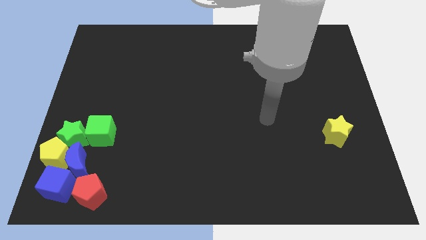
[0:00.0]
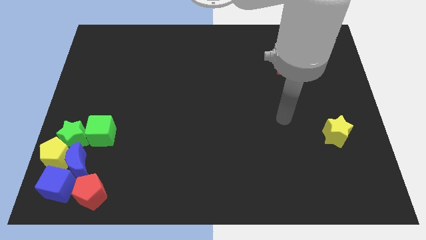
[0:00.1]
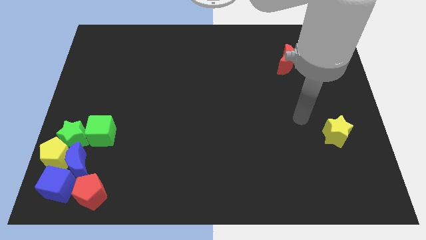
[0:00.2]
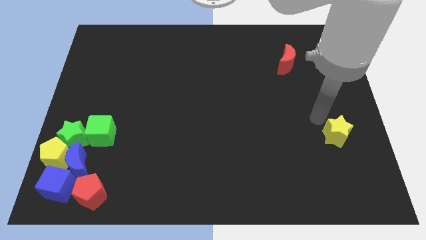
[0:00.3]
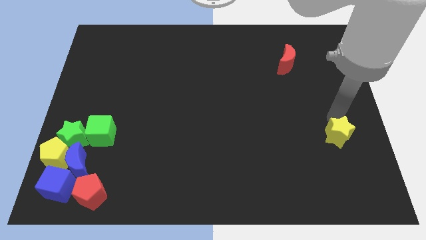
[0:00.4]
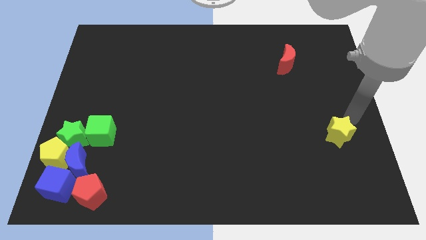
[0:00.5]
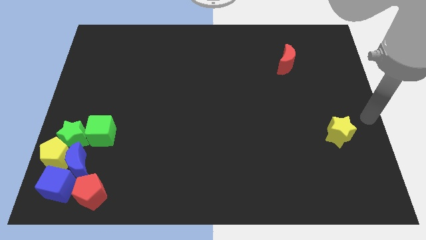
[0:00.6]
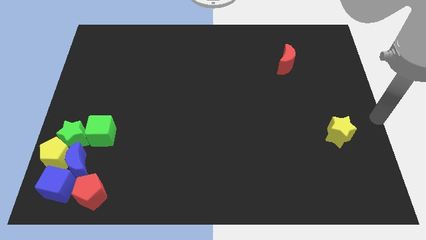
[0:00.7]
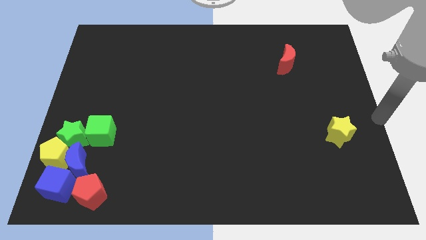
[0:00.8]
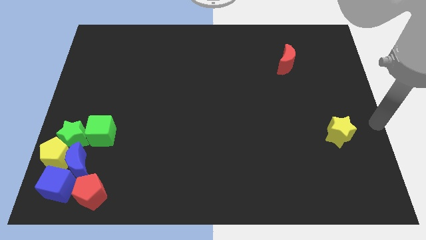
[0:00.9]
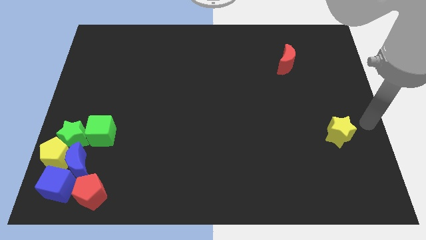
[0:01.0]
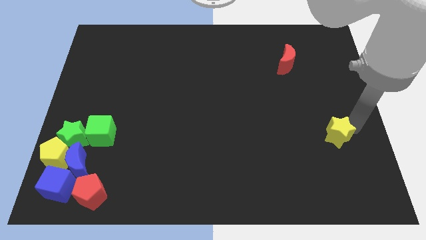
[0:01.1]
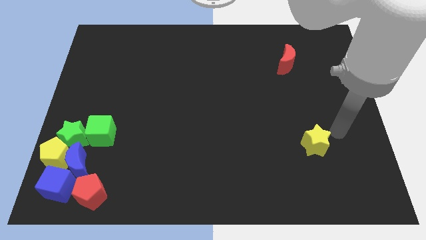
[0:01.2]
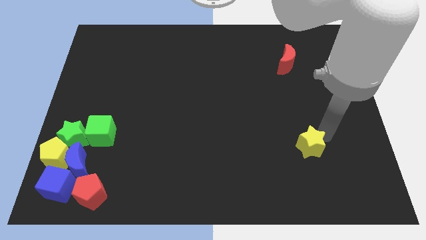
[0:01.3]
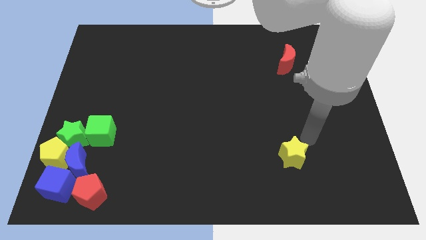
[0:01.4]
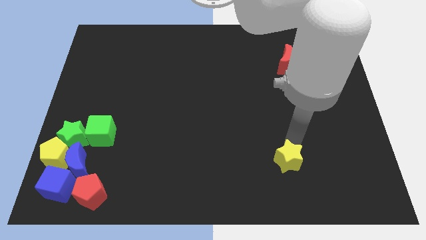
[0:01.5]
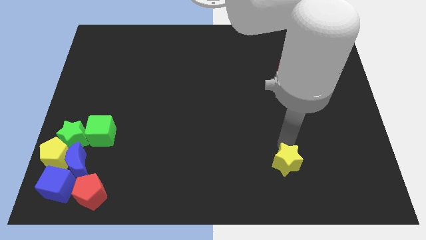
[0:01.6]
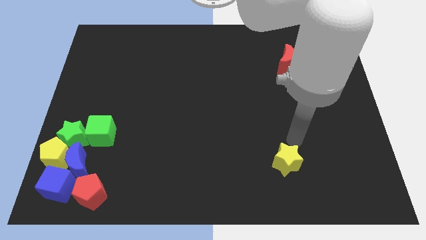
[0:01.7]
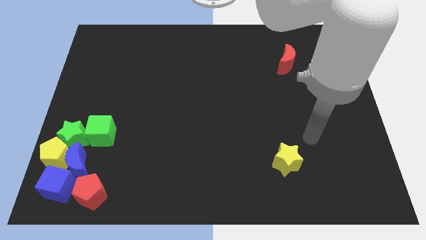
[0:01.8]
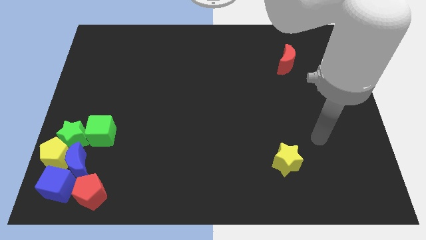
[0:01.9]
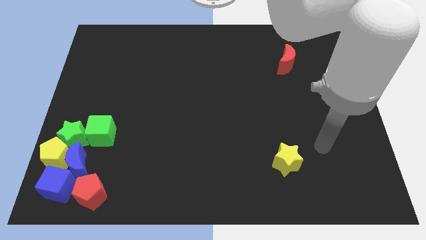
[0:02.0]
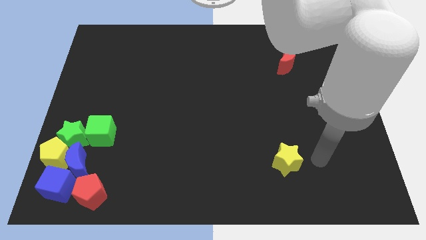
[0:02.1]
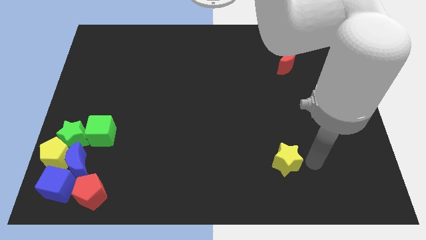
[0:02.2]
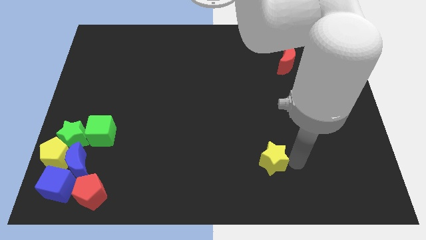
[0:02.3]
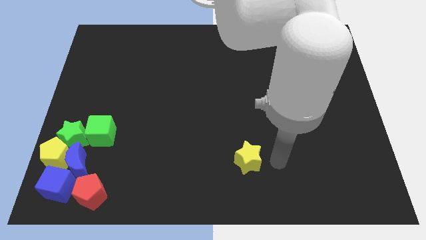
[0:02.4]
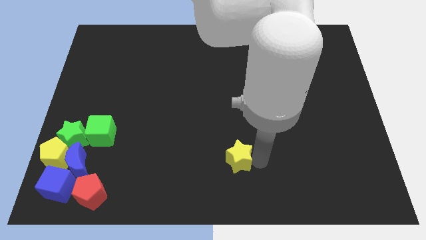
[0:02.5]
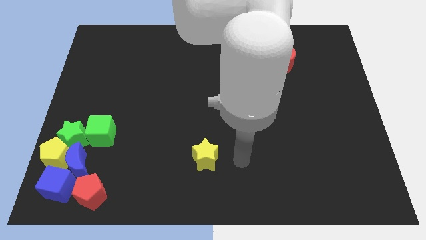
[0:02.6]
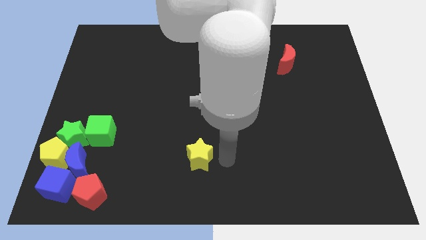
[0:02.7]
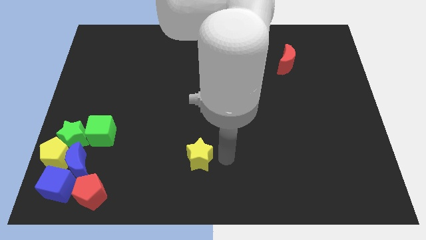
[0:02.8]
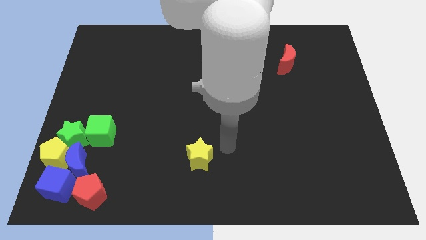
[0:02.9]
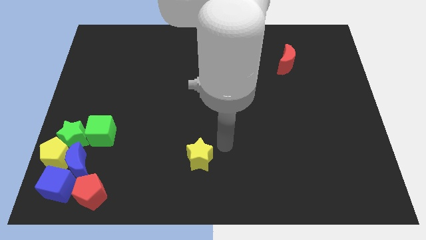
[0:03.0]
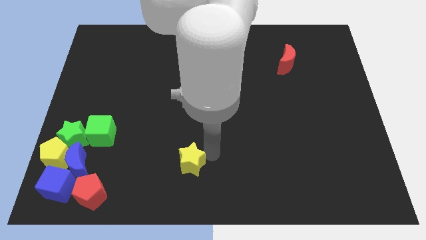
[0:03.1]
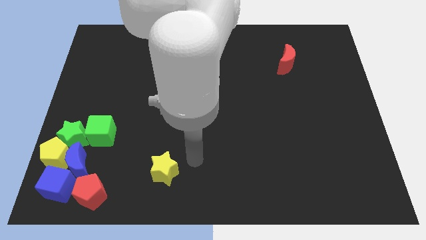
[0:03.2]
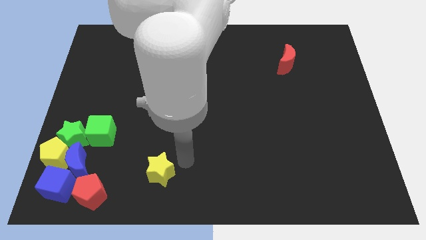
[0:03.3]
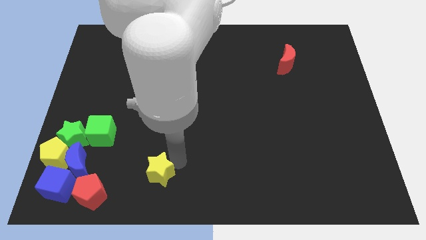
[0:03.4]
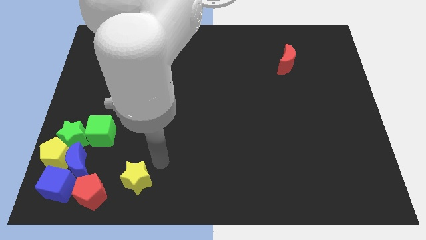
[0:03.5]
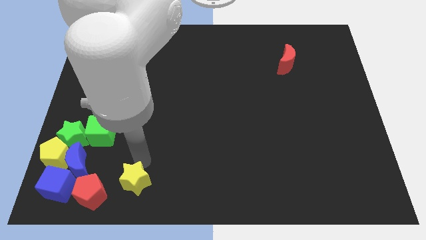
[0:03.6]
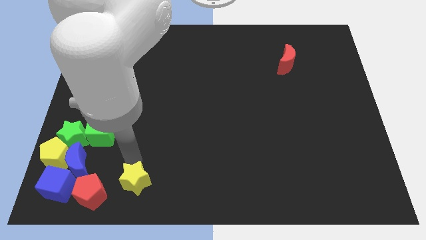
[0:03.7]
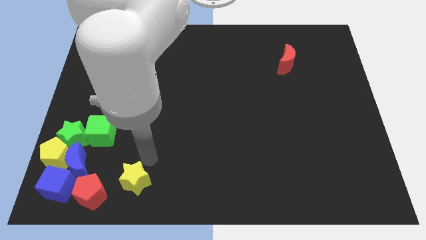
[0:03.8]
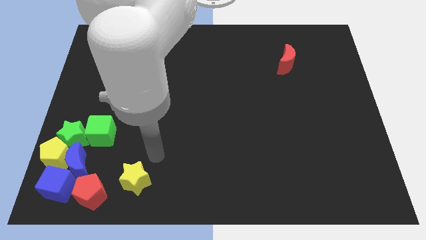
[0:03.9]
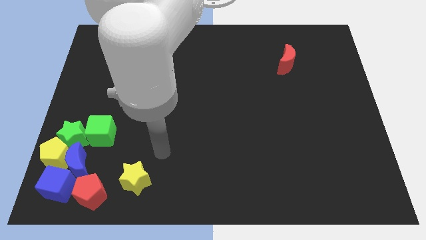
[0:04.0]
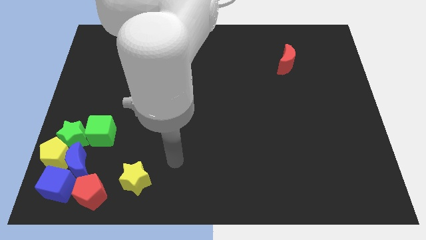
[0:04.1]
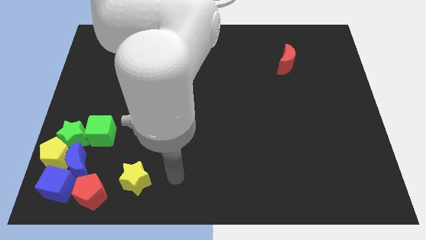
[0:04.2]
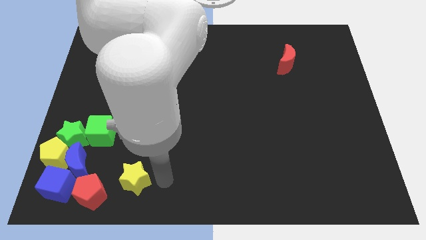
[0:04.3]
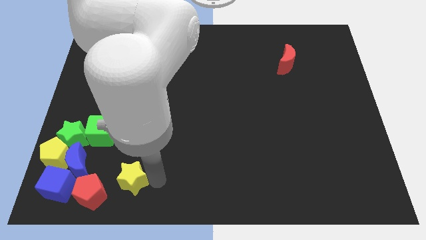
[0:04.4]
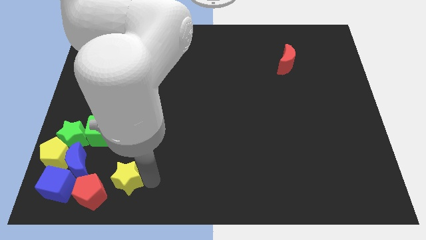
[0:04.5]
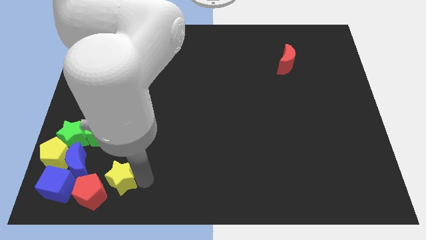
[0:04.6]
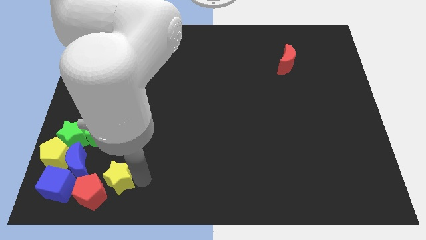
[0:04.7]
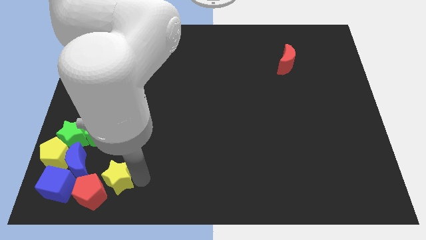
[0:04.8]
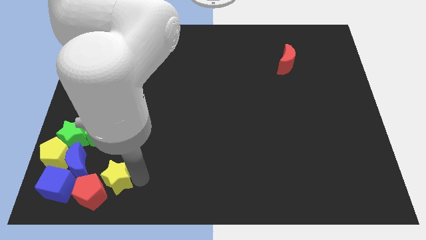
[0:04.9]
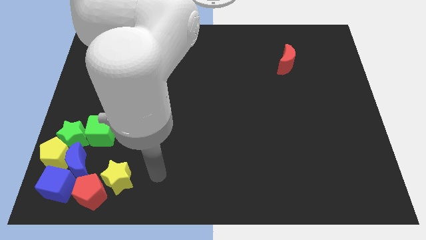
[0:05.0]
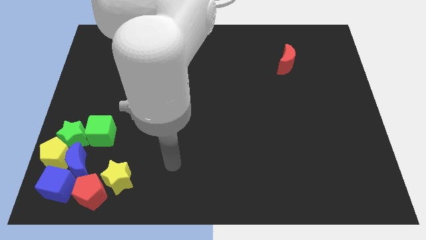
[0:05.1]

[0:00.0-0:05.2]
place the yellow star to the top right corner of the red pentagon

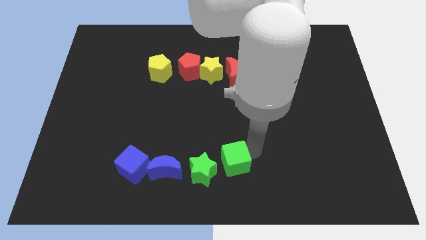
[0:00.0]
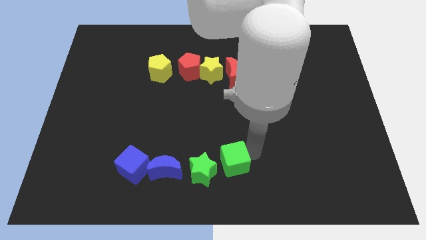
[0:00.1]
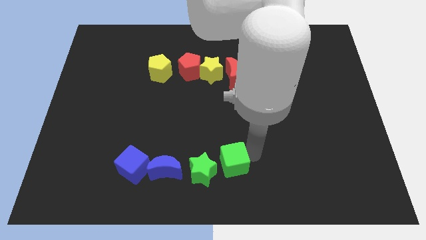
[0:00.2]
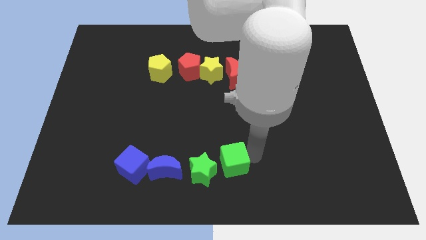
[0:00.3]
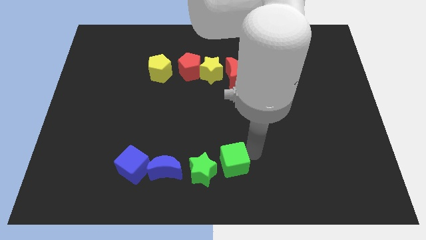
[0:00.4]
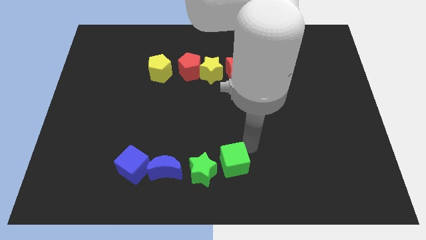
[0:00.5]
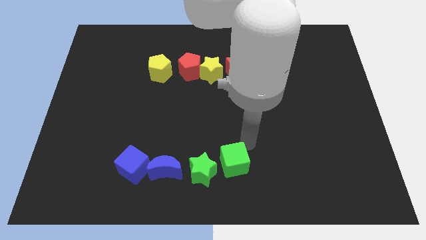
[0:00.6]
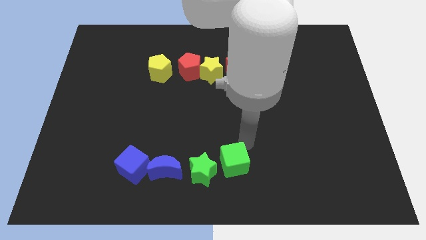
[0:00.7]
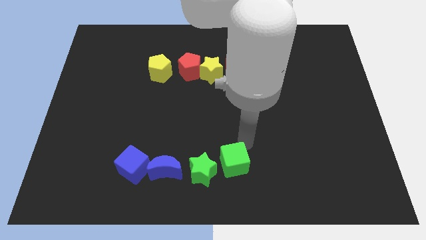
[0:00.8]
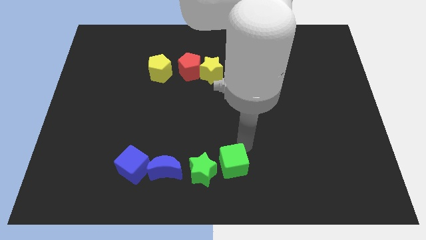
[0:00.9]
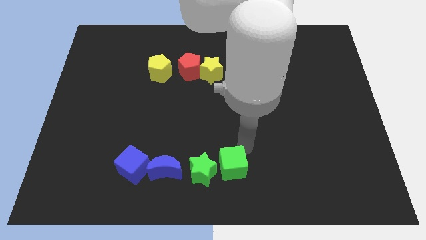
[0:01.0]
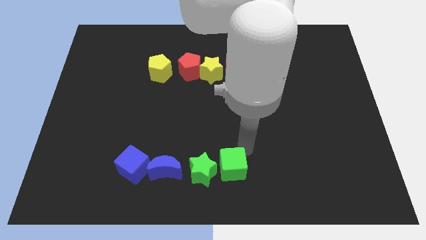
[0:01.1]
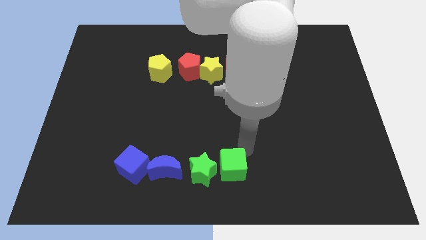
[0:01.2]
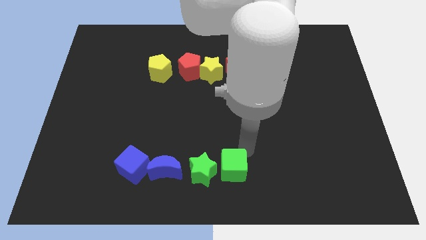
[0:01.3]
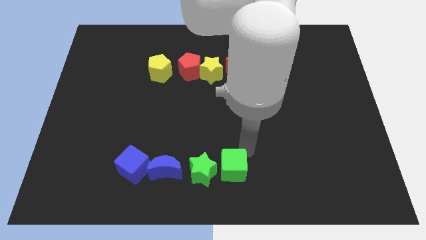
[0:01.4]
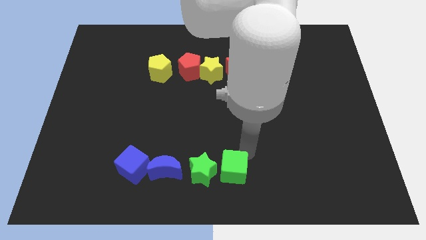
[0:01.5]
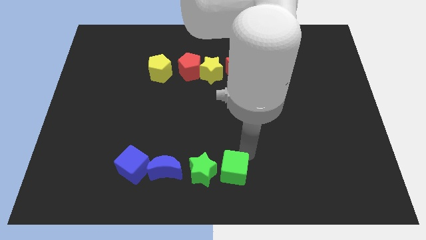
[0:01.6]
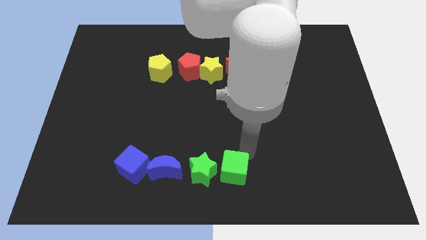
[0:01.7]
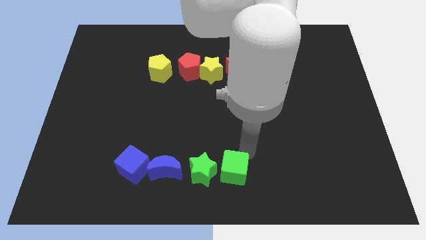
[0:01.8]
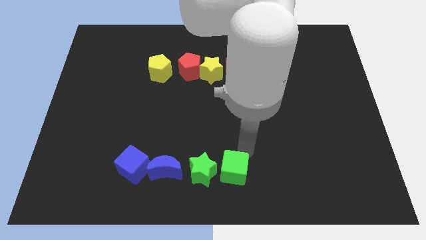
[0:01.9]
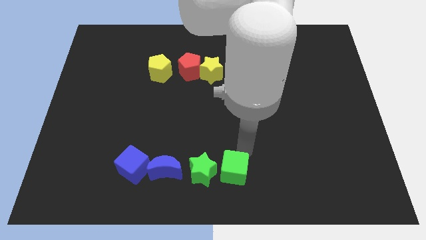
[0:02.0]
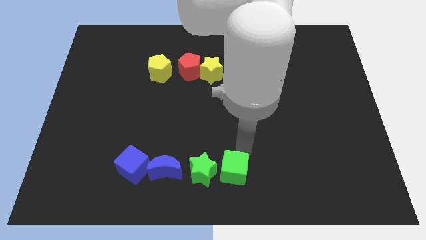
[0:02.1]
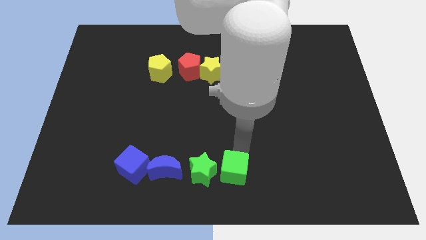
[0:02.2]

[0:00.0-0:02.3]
push the green cube close to the green star

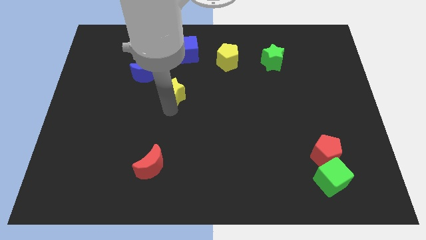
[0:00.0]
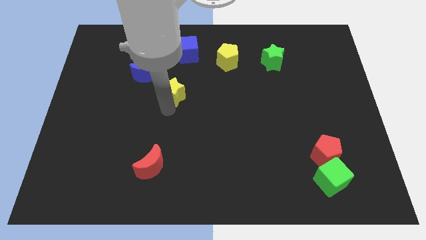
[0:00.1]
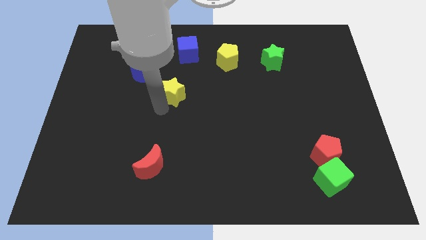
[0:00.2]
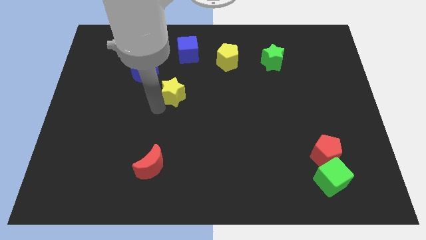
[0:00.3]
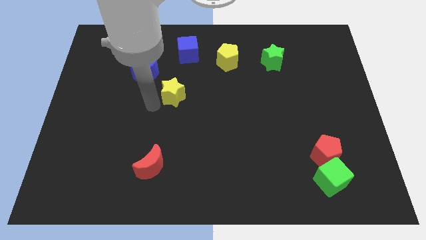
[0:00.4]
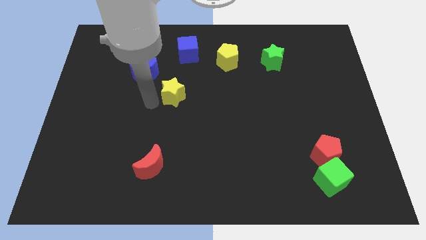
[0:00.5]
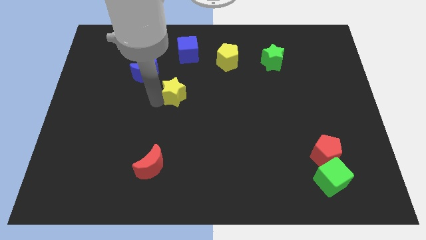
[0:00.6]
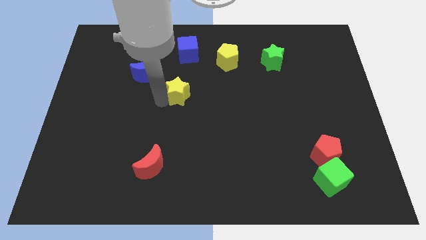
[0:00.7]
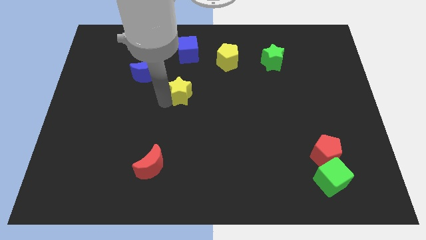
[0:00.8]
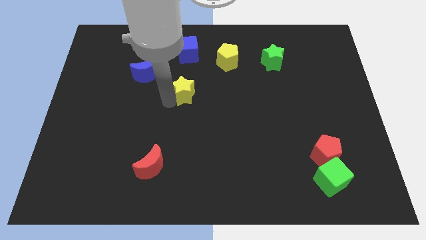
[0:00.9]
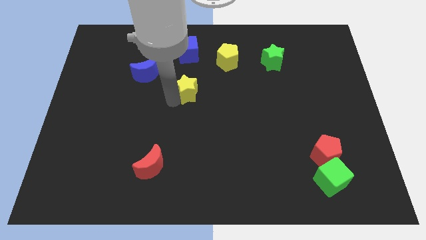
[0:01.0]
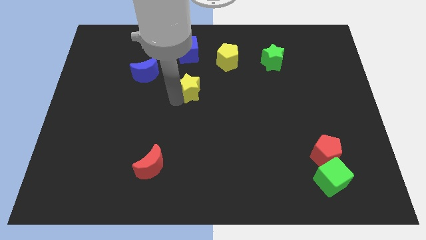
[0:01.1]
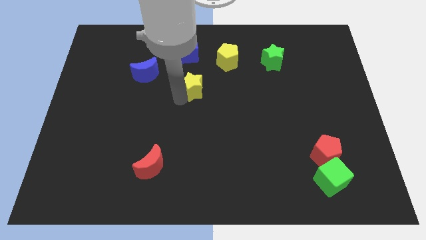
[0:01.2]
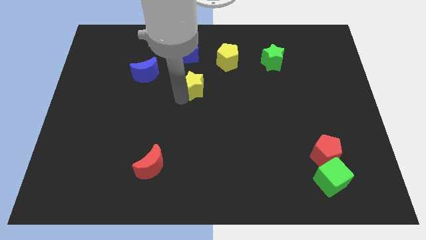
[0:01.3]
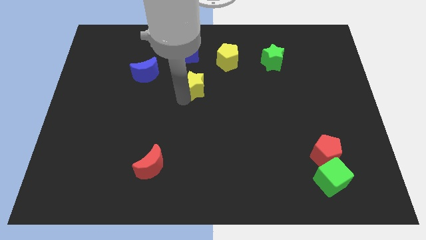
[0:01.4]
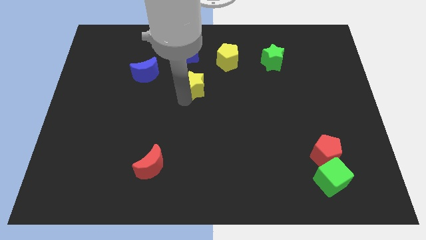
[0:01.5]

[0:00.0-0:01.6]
place the yellow star below the blue cube

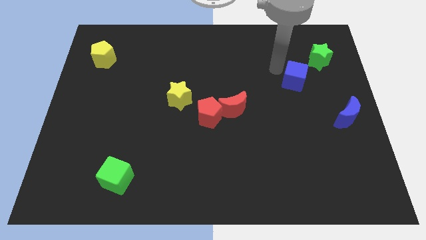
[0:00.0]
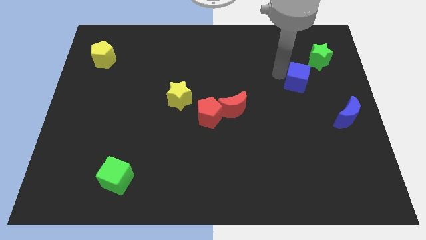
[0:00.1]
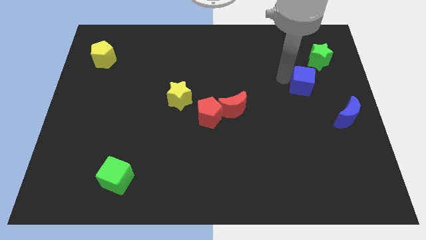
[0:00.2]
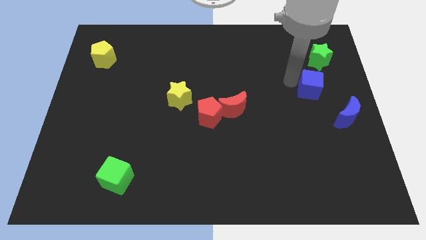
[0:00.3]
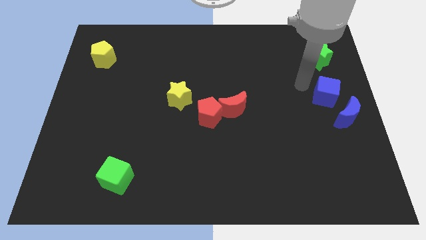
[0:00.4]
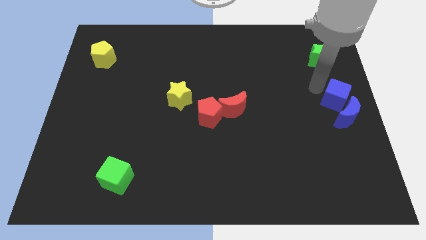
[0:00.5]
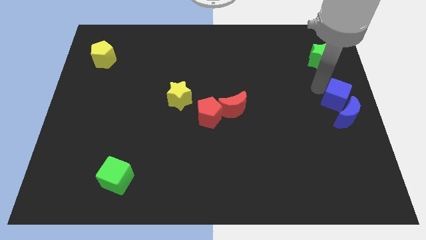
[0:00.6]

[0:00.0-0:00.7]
move the blue cube above the blue moon
